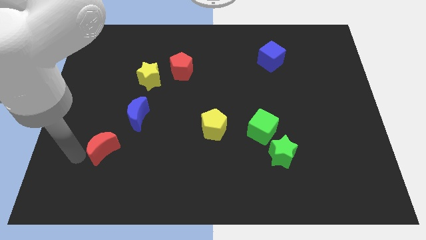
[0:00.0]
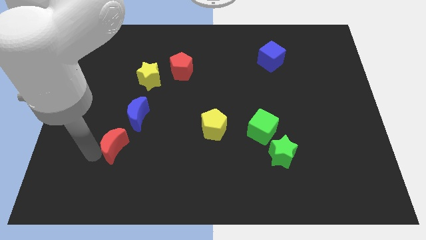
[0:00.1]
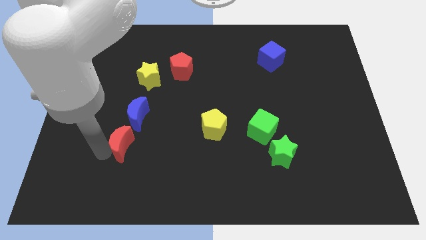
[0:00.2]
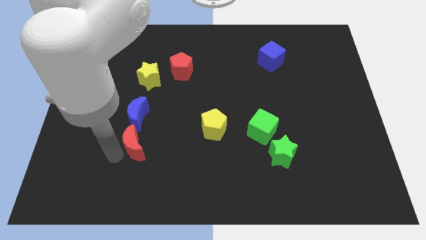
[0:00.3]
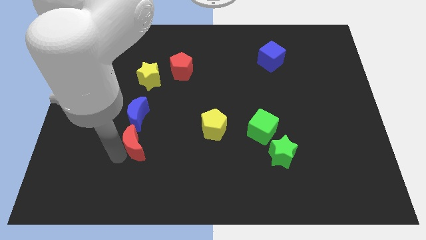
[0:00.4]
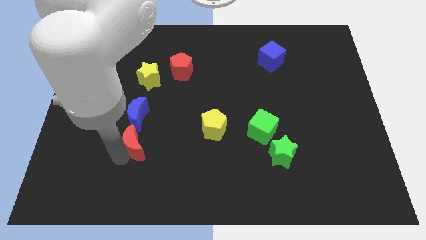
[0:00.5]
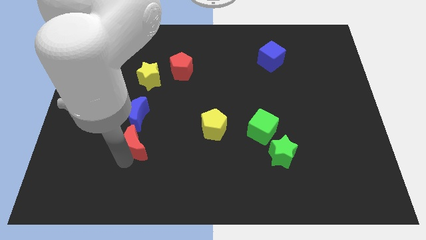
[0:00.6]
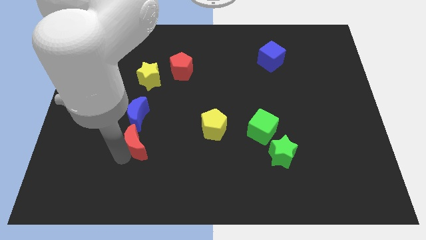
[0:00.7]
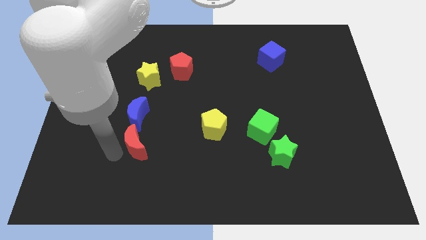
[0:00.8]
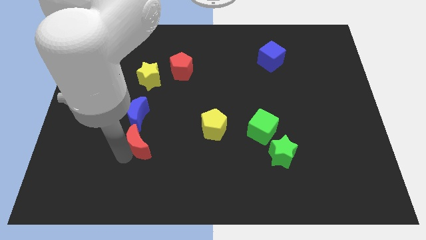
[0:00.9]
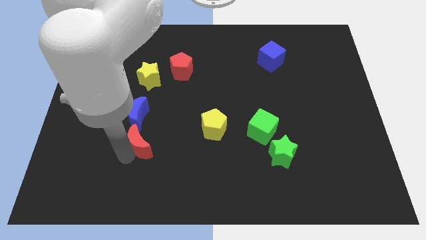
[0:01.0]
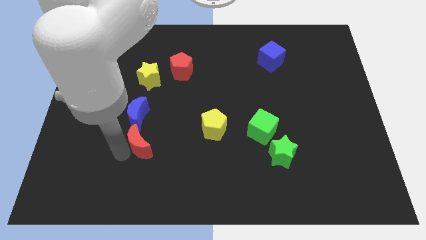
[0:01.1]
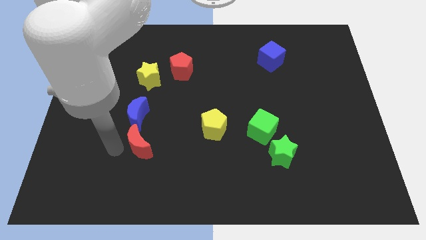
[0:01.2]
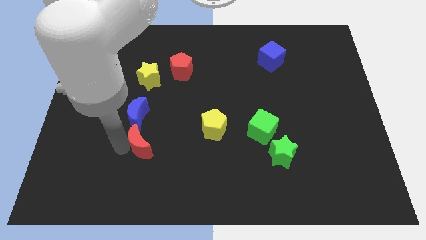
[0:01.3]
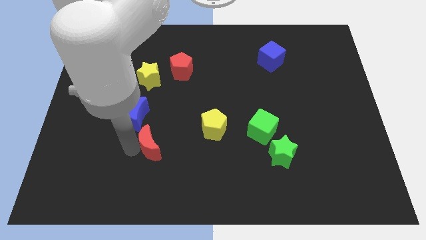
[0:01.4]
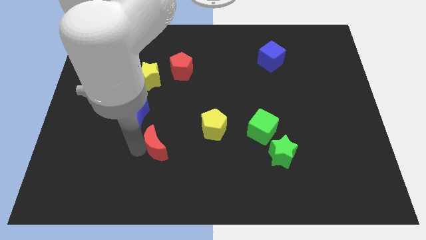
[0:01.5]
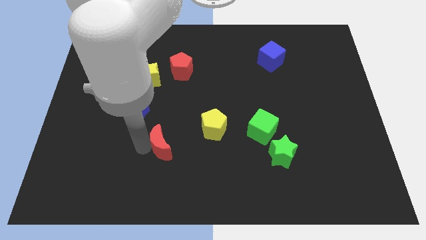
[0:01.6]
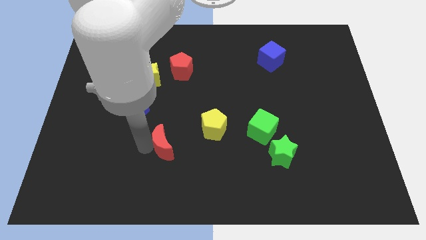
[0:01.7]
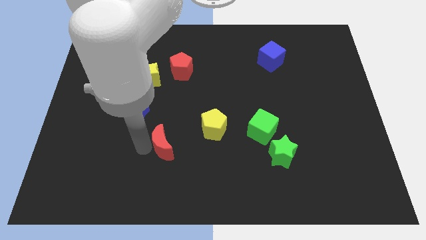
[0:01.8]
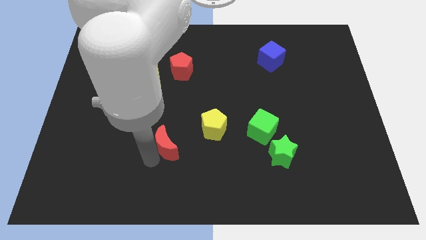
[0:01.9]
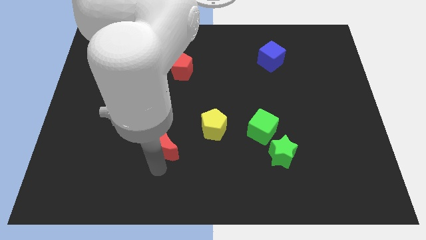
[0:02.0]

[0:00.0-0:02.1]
push the red moon towards the bottom right side of the blue moon

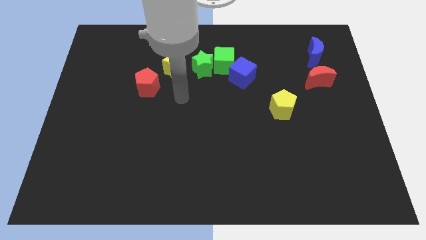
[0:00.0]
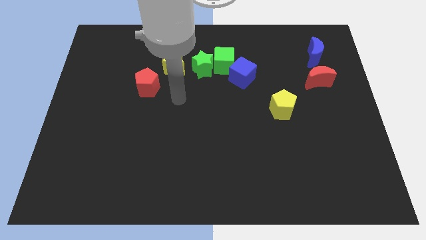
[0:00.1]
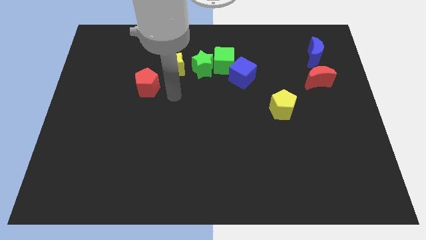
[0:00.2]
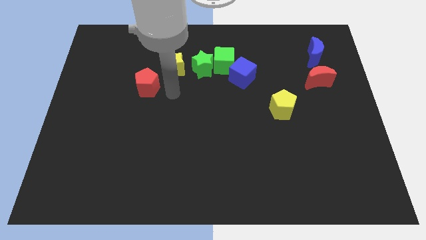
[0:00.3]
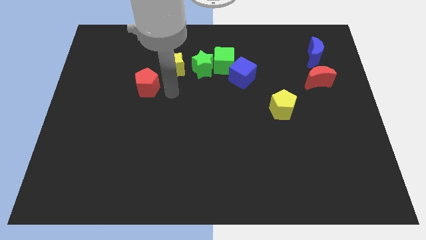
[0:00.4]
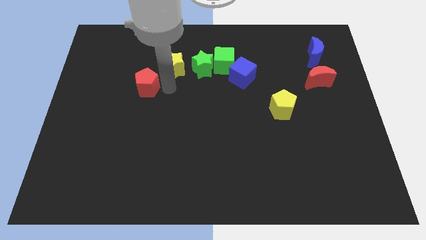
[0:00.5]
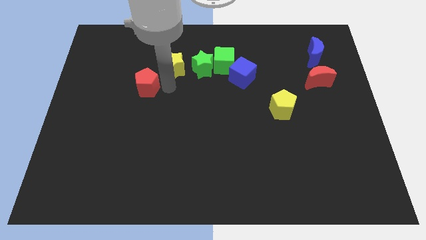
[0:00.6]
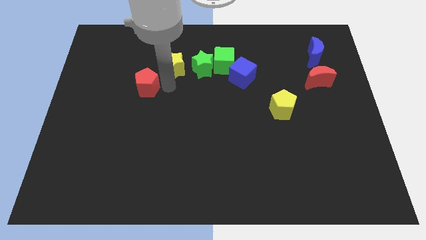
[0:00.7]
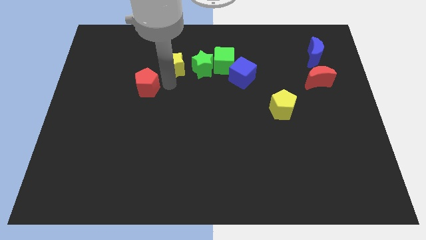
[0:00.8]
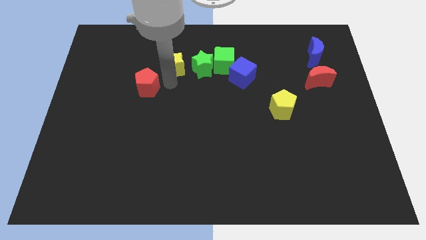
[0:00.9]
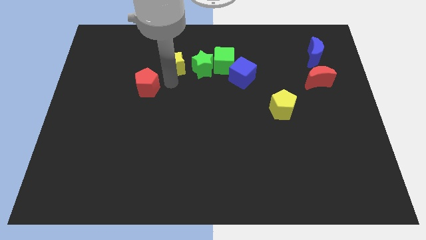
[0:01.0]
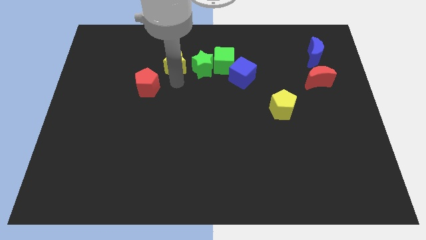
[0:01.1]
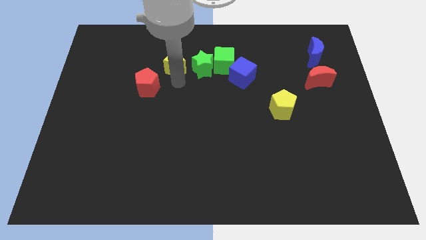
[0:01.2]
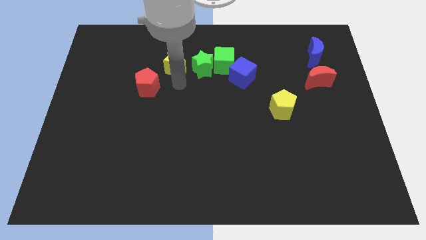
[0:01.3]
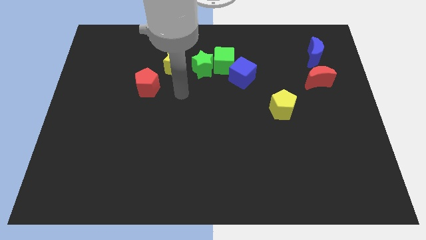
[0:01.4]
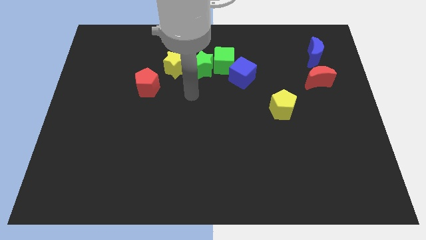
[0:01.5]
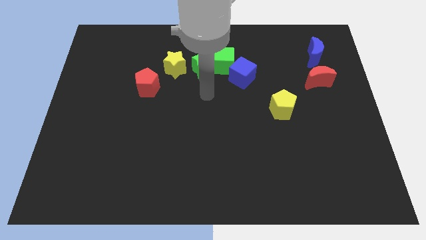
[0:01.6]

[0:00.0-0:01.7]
touch the yellow star slightly

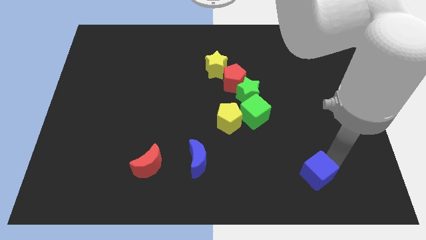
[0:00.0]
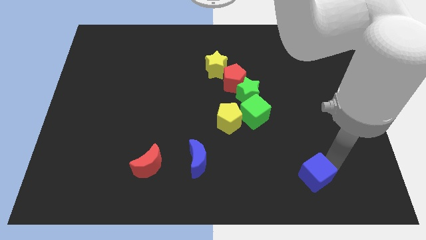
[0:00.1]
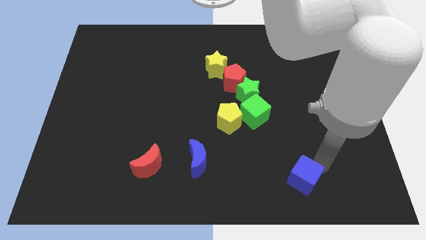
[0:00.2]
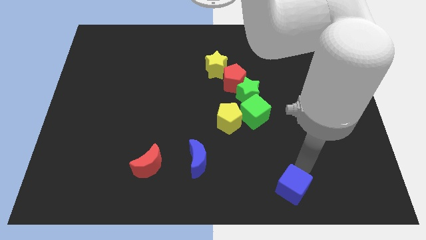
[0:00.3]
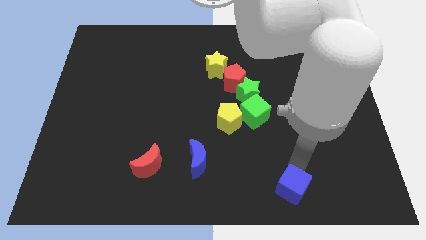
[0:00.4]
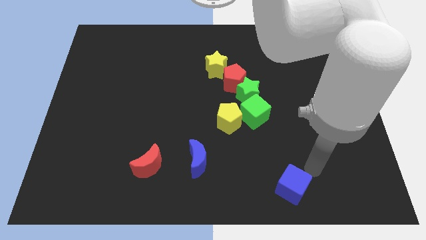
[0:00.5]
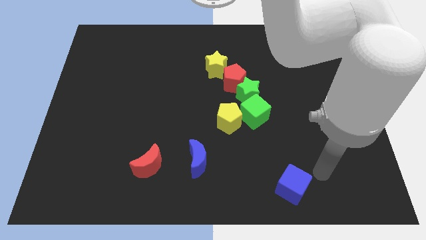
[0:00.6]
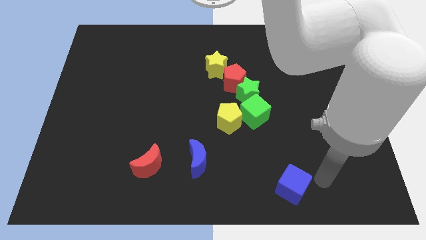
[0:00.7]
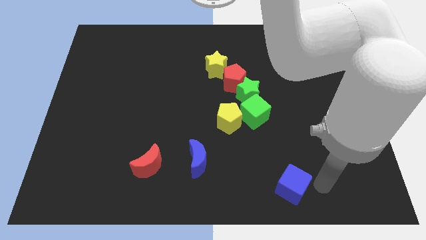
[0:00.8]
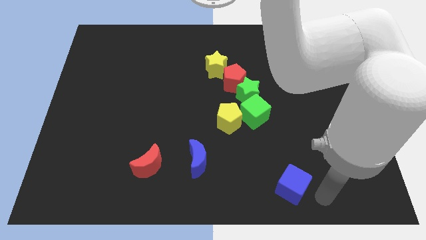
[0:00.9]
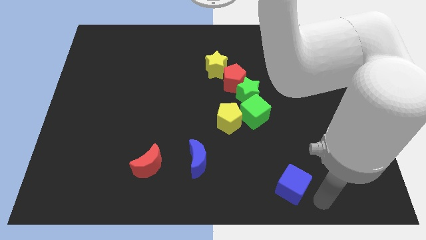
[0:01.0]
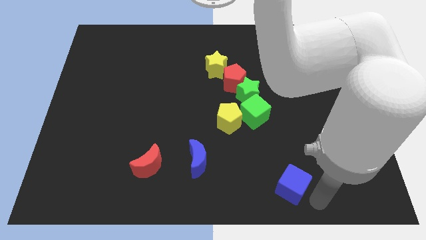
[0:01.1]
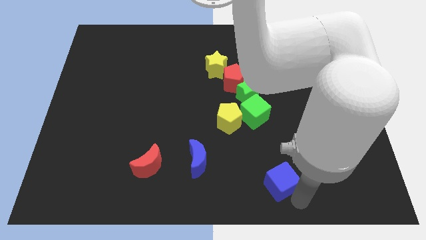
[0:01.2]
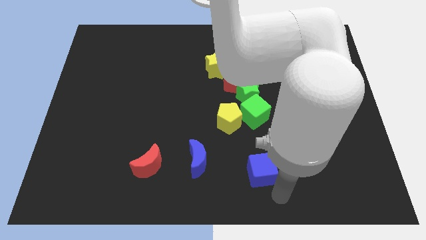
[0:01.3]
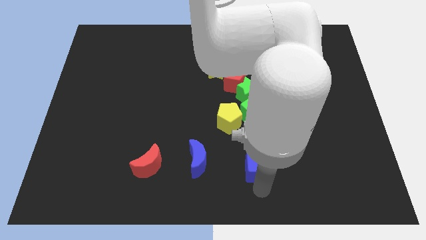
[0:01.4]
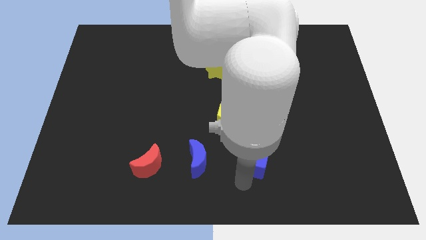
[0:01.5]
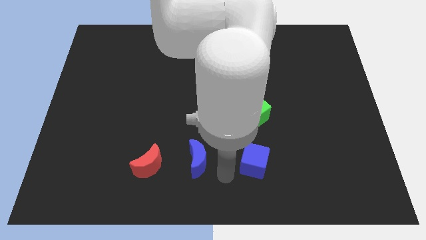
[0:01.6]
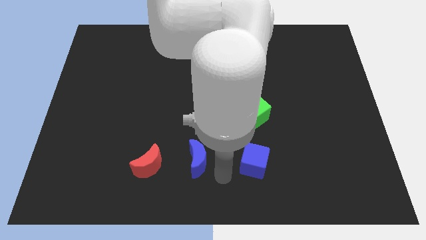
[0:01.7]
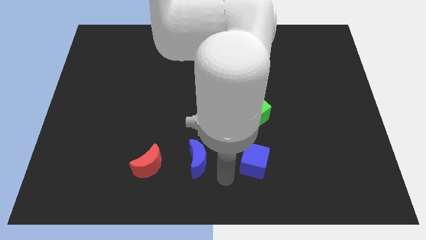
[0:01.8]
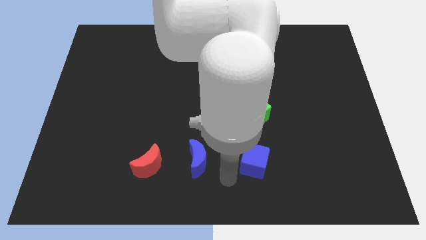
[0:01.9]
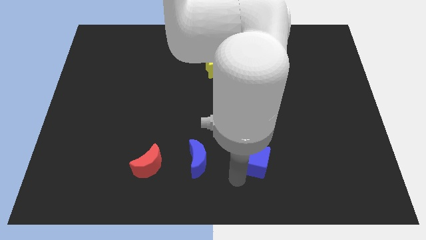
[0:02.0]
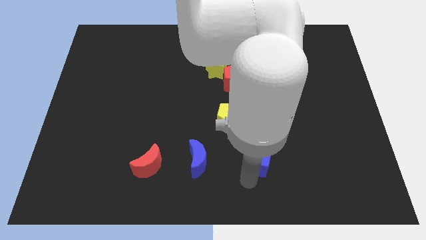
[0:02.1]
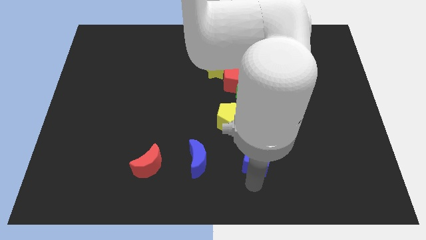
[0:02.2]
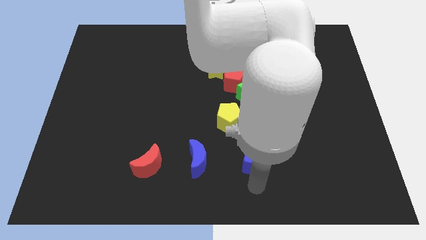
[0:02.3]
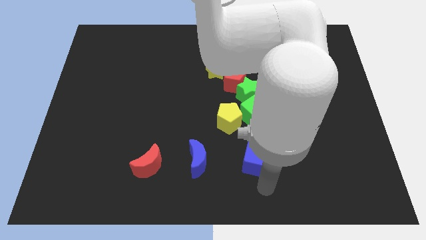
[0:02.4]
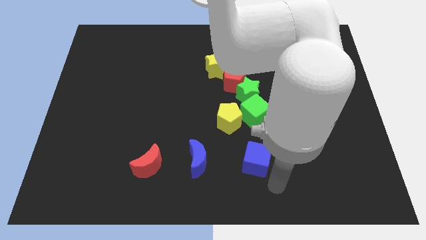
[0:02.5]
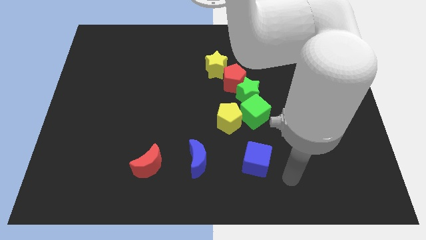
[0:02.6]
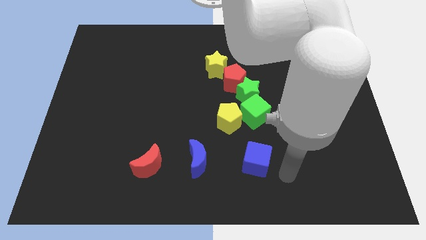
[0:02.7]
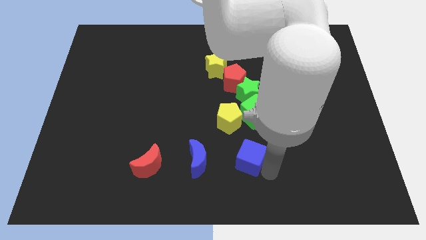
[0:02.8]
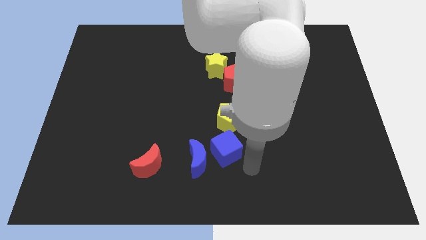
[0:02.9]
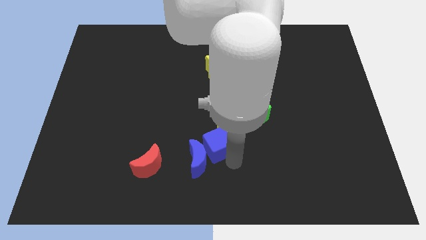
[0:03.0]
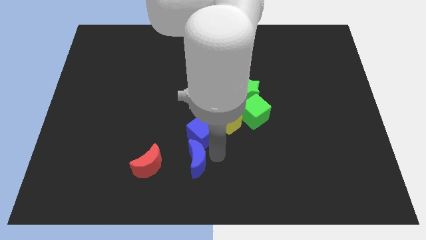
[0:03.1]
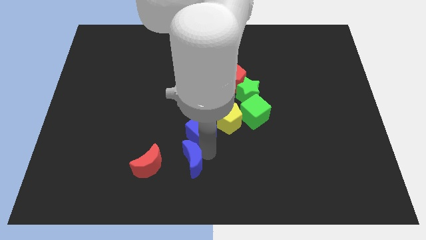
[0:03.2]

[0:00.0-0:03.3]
push blue cube in to blue crescent

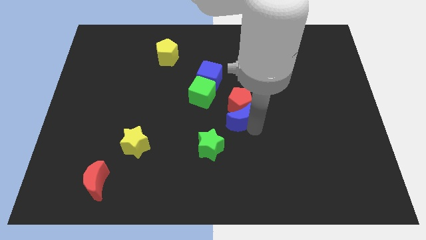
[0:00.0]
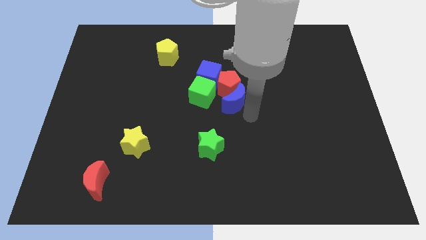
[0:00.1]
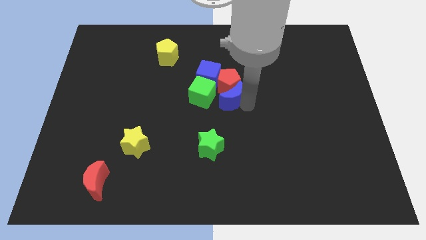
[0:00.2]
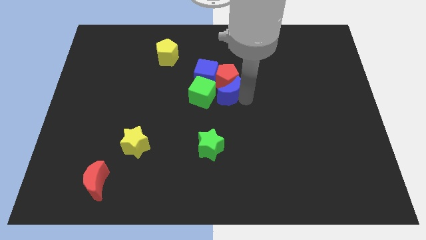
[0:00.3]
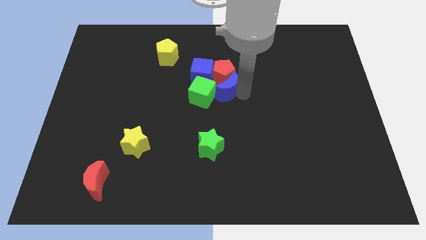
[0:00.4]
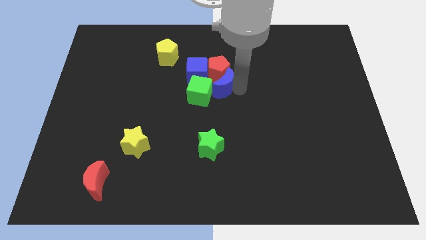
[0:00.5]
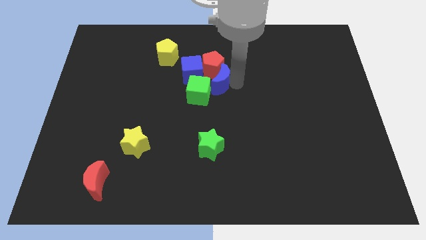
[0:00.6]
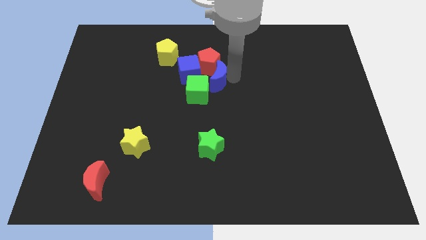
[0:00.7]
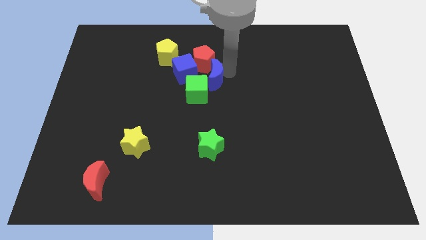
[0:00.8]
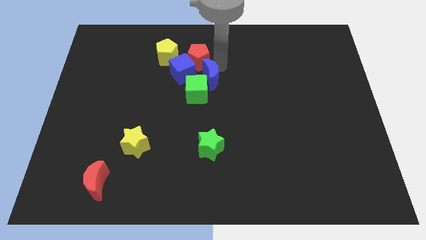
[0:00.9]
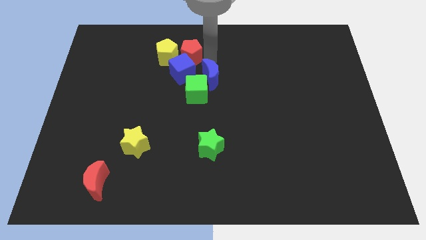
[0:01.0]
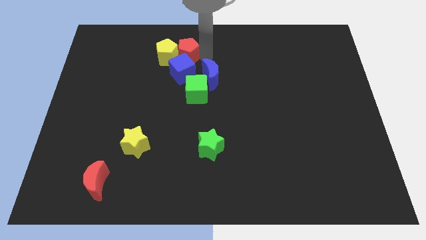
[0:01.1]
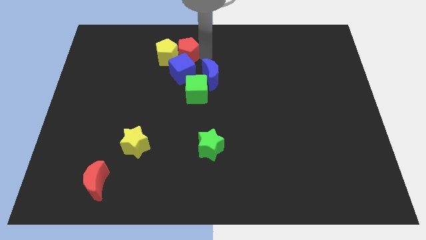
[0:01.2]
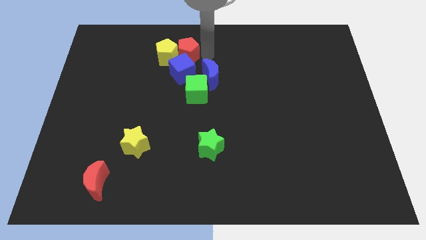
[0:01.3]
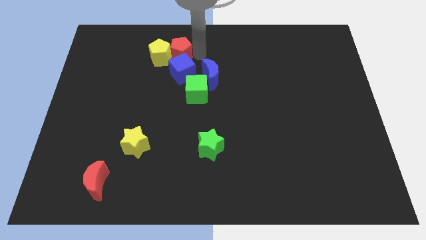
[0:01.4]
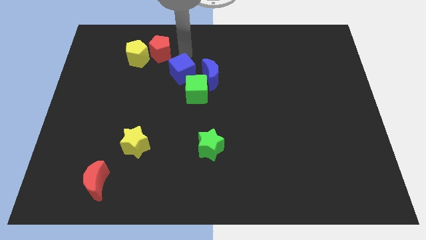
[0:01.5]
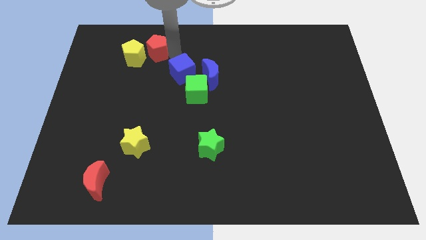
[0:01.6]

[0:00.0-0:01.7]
move the blue moon slightly upwards

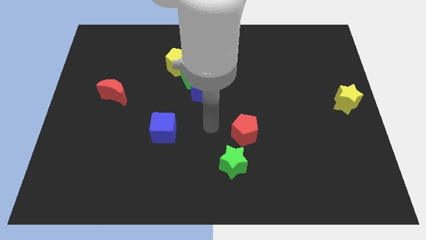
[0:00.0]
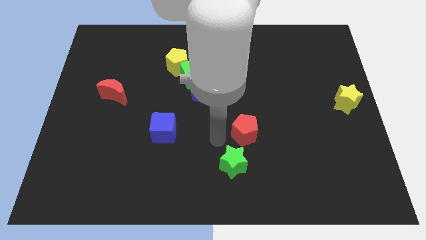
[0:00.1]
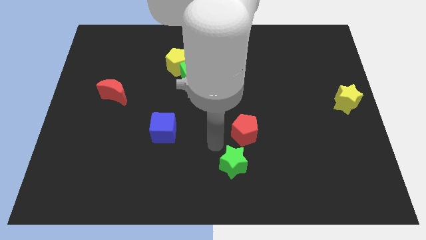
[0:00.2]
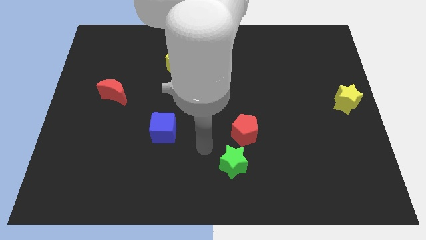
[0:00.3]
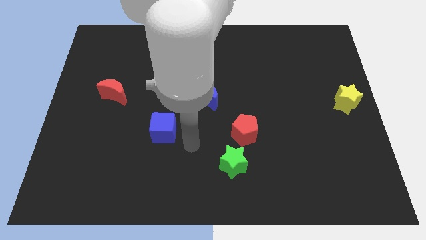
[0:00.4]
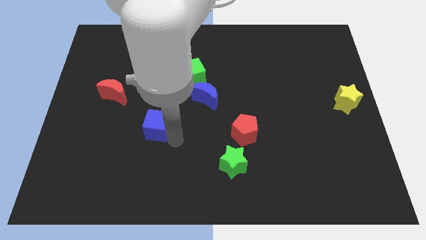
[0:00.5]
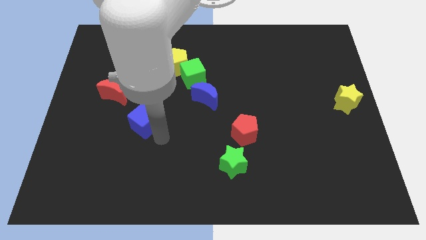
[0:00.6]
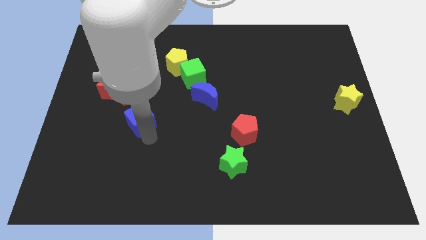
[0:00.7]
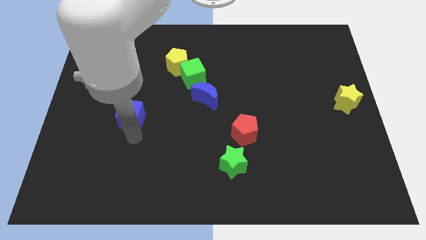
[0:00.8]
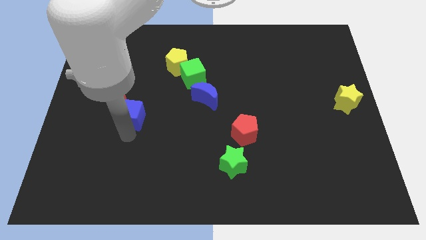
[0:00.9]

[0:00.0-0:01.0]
push the blue cube towards the red moon
